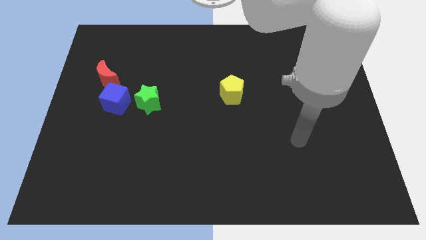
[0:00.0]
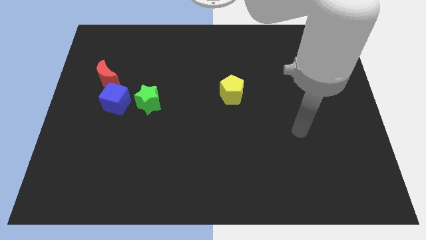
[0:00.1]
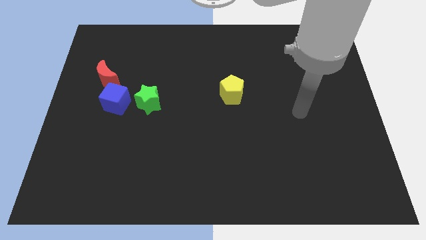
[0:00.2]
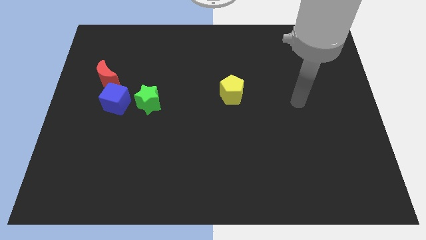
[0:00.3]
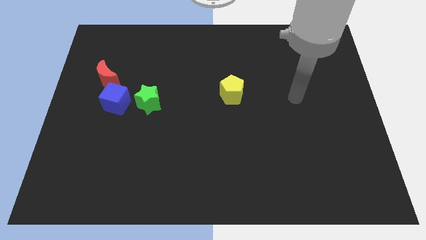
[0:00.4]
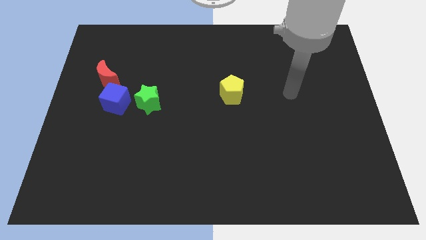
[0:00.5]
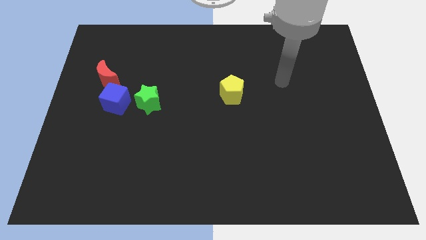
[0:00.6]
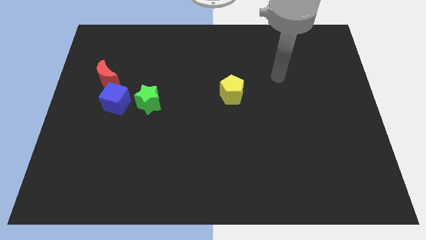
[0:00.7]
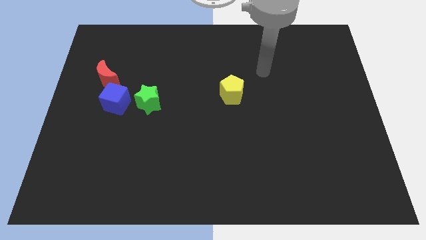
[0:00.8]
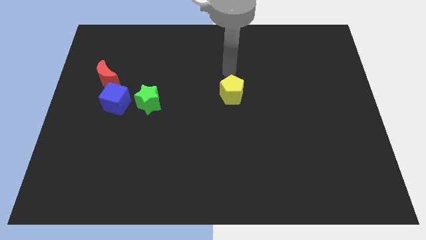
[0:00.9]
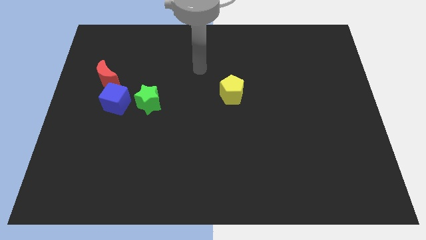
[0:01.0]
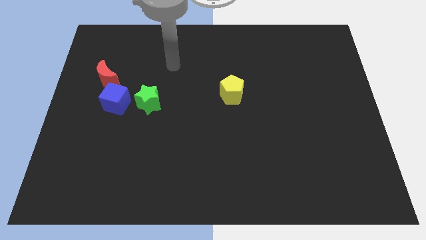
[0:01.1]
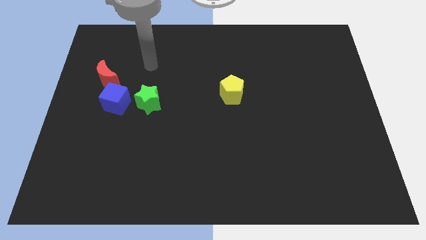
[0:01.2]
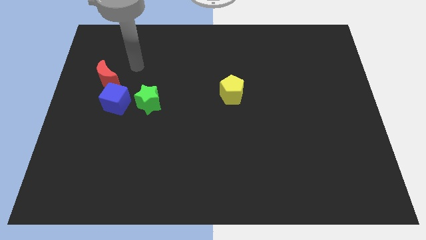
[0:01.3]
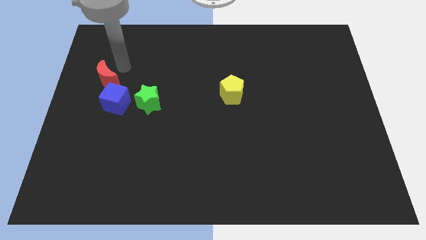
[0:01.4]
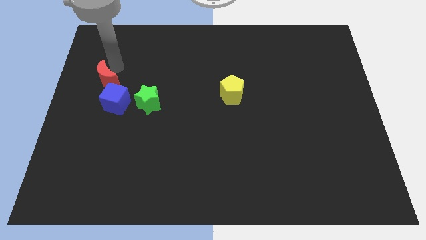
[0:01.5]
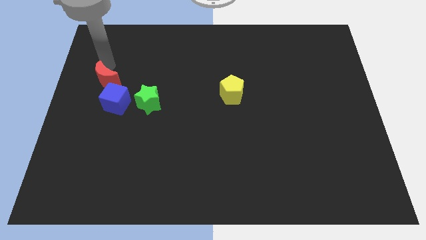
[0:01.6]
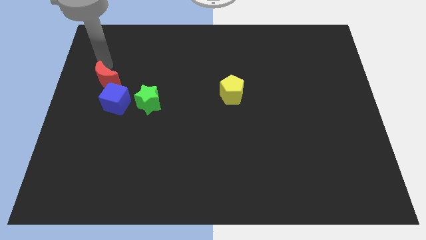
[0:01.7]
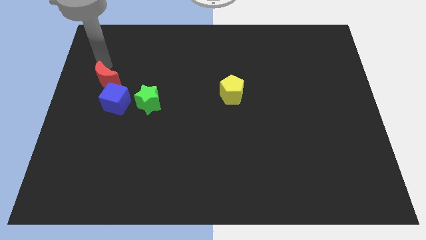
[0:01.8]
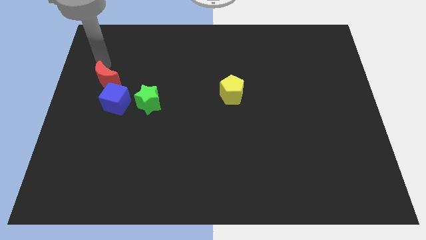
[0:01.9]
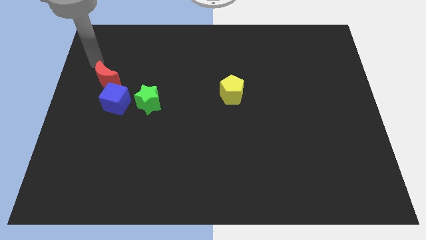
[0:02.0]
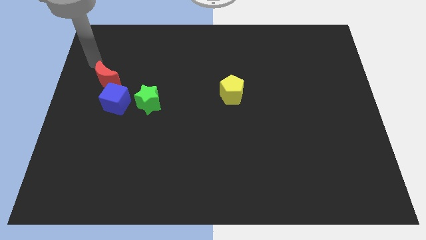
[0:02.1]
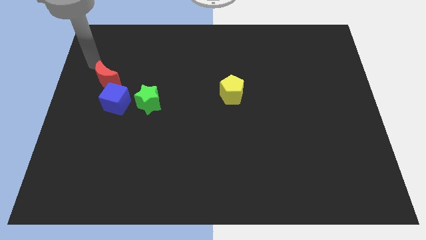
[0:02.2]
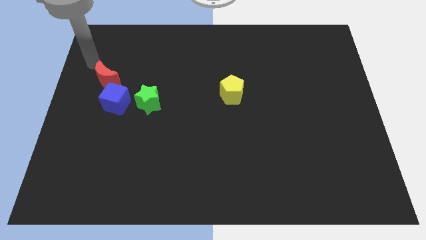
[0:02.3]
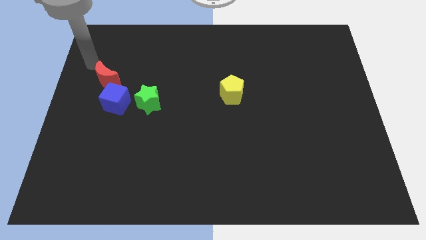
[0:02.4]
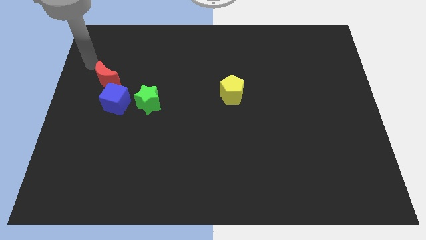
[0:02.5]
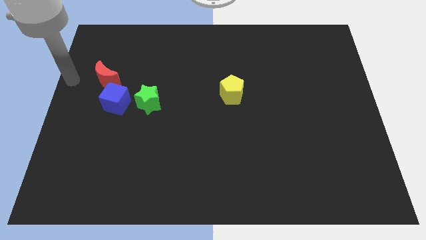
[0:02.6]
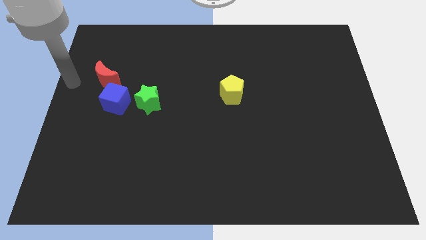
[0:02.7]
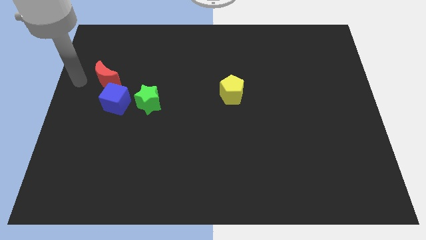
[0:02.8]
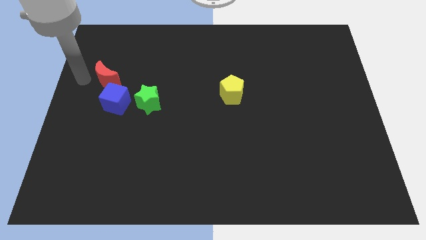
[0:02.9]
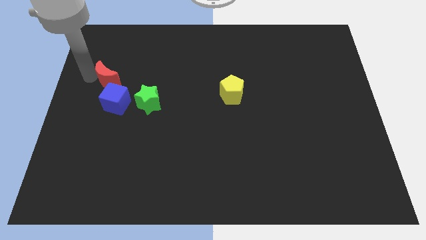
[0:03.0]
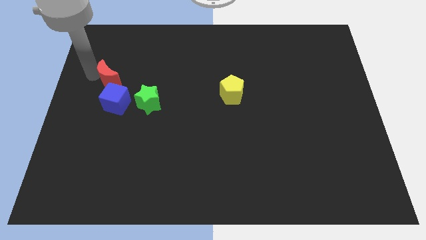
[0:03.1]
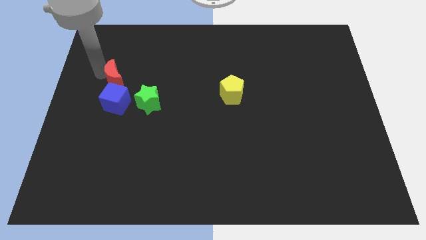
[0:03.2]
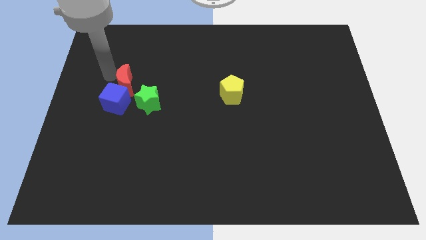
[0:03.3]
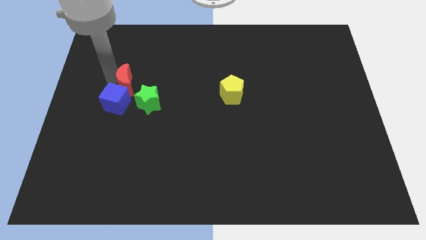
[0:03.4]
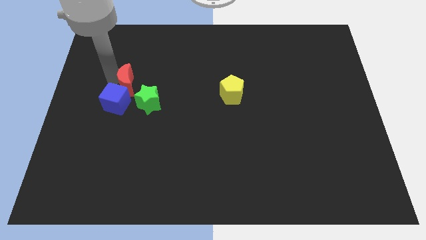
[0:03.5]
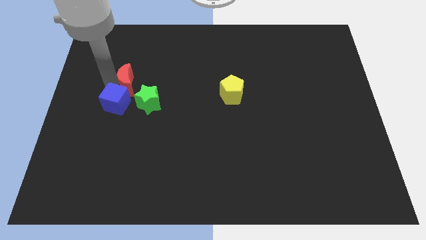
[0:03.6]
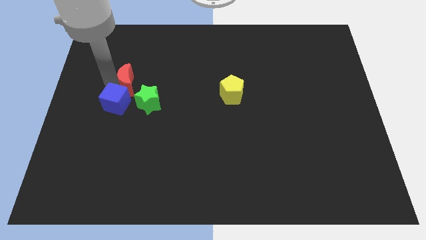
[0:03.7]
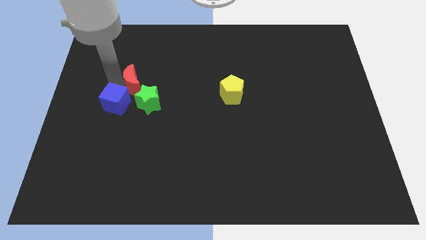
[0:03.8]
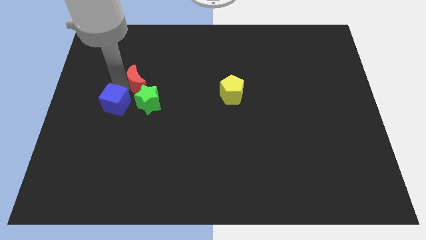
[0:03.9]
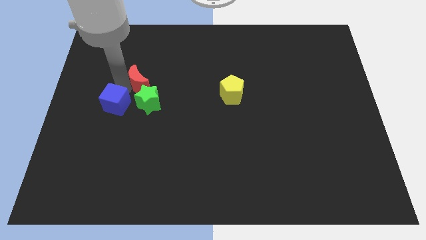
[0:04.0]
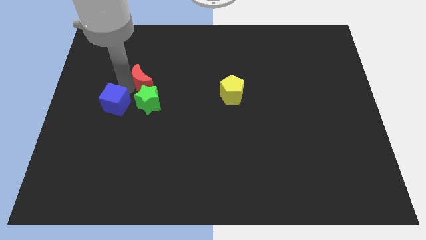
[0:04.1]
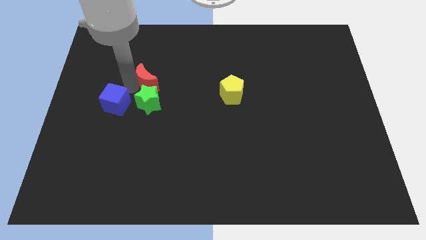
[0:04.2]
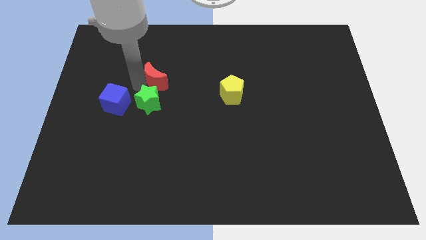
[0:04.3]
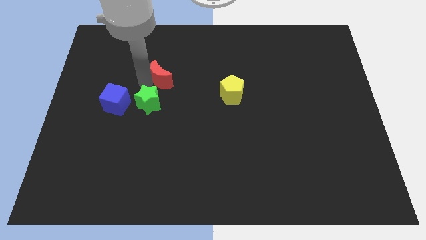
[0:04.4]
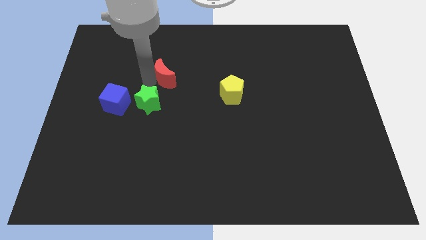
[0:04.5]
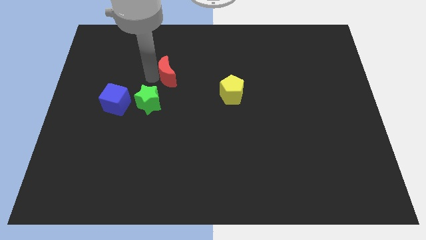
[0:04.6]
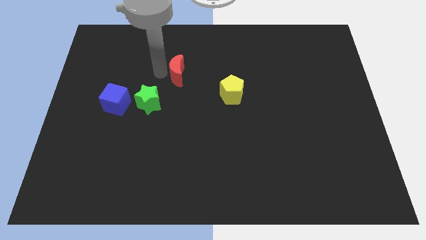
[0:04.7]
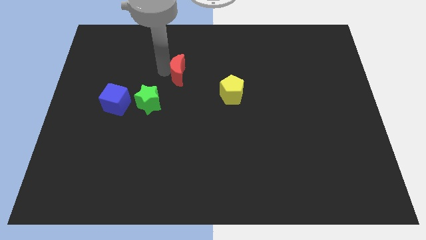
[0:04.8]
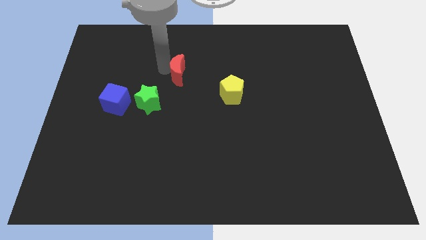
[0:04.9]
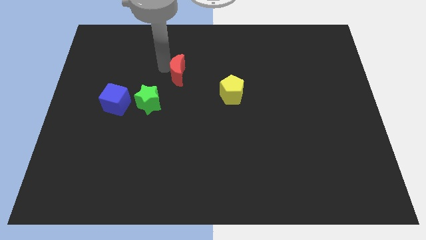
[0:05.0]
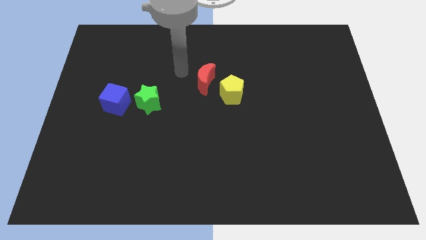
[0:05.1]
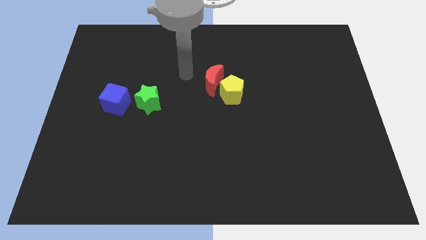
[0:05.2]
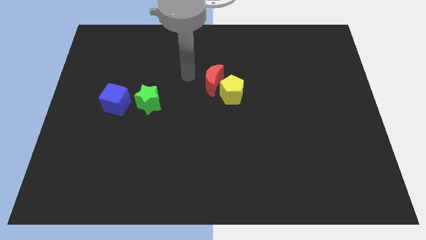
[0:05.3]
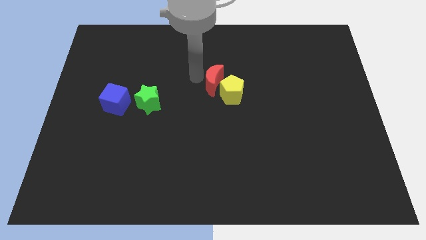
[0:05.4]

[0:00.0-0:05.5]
move the red block next to the yellow block

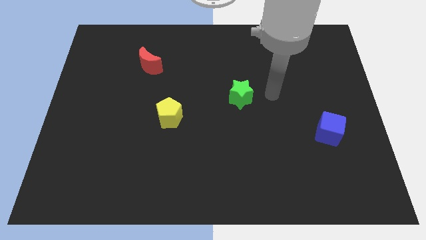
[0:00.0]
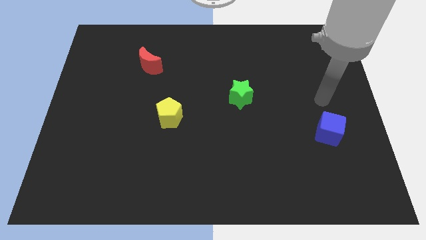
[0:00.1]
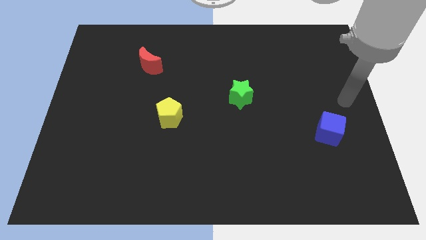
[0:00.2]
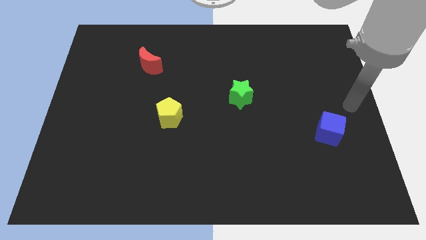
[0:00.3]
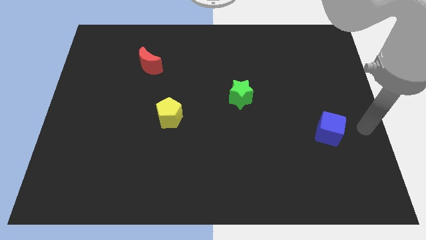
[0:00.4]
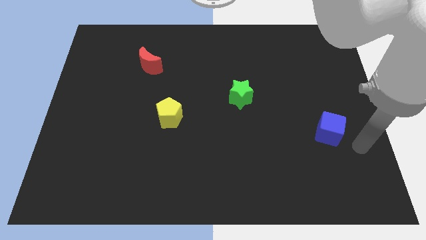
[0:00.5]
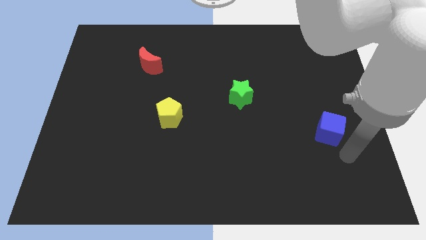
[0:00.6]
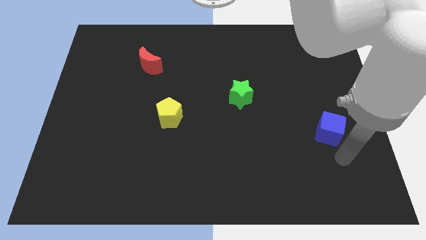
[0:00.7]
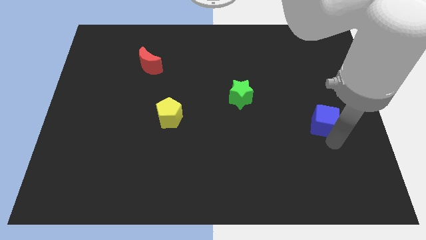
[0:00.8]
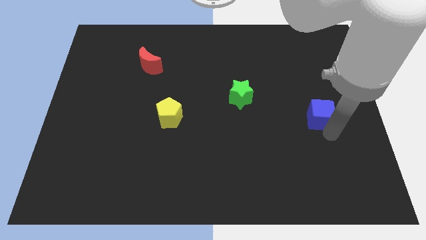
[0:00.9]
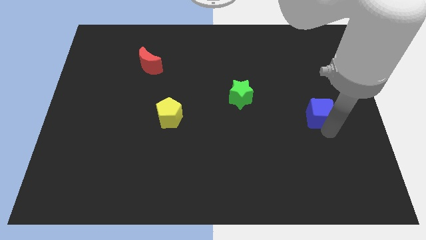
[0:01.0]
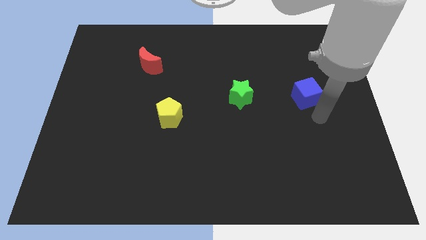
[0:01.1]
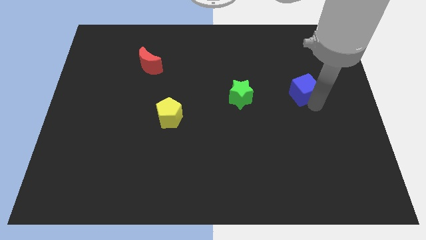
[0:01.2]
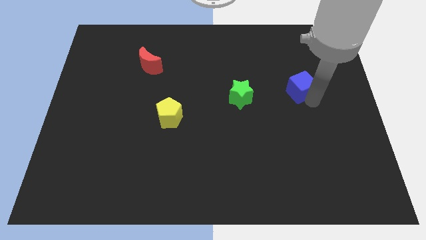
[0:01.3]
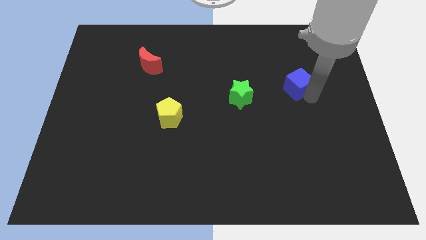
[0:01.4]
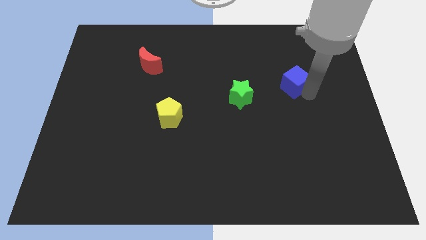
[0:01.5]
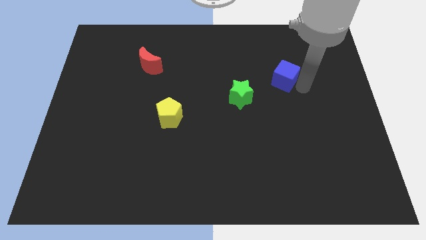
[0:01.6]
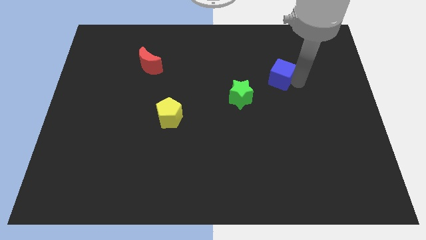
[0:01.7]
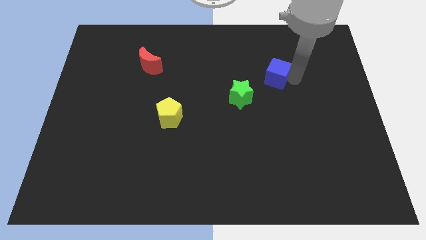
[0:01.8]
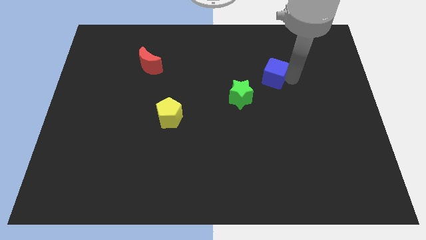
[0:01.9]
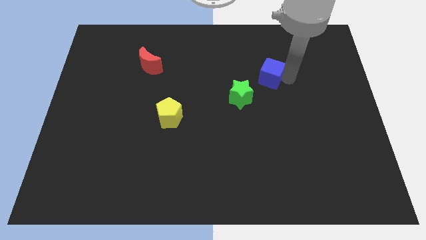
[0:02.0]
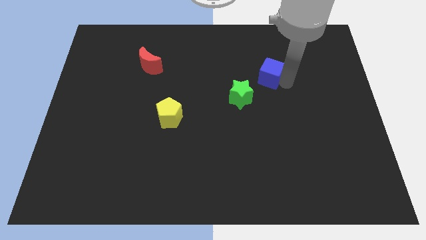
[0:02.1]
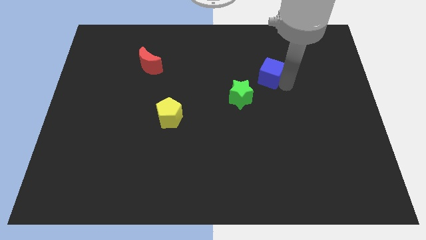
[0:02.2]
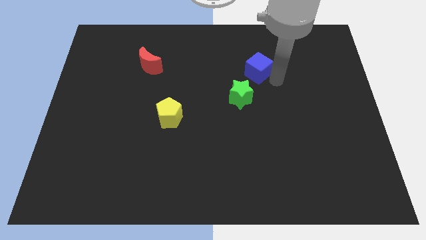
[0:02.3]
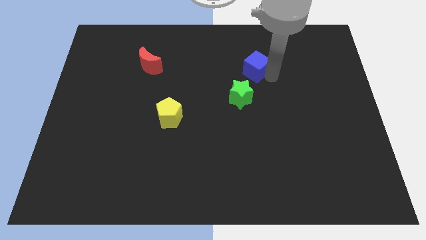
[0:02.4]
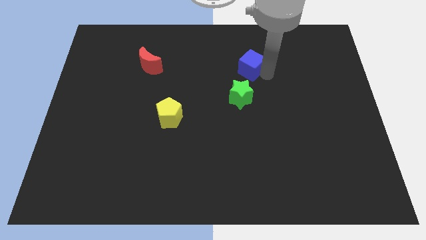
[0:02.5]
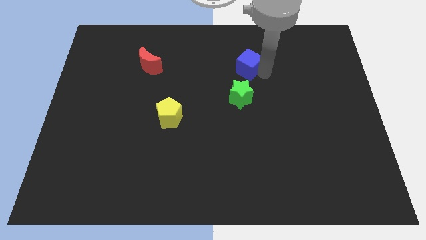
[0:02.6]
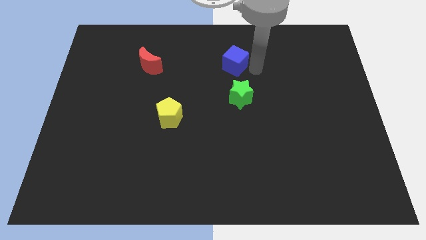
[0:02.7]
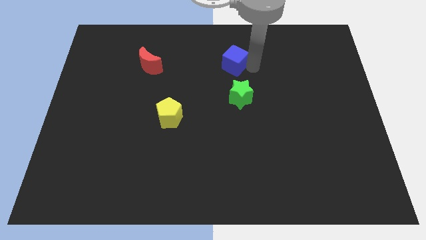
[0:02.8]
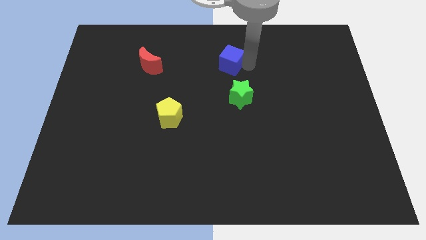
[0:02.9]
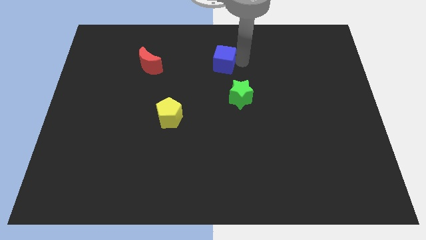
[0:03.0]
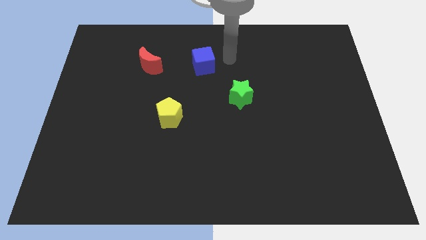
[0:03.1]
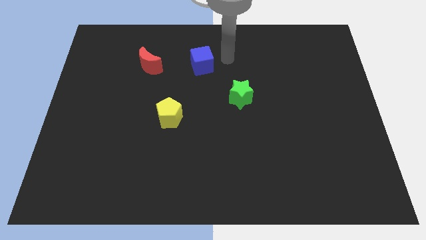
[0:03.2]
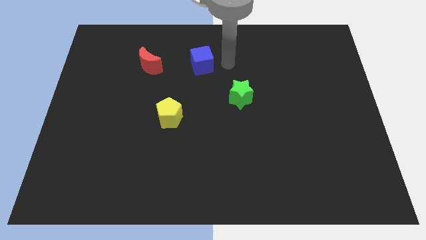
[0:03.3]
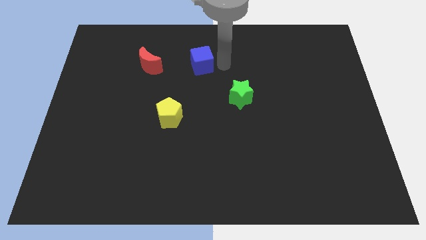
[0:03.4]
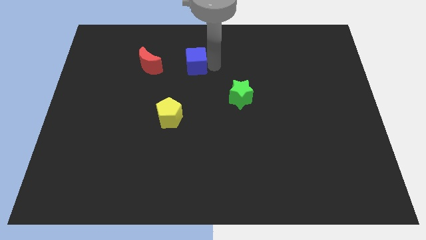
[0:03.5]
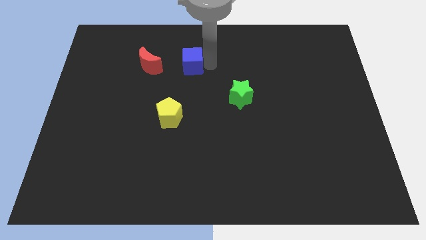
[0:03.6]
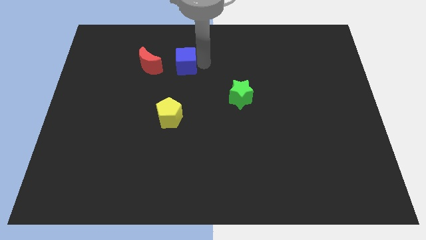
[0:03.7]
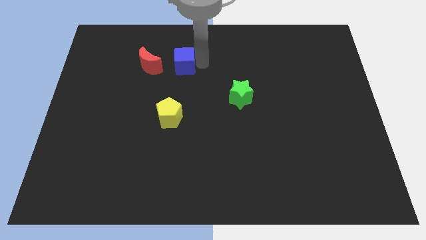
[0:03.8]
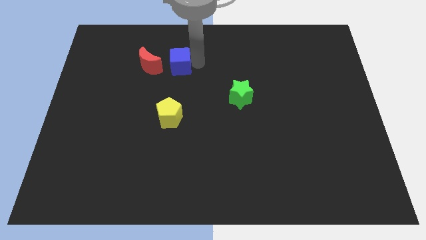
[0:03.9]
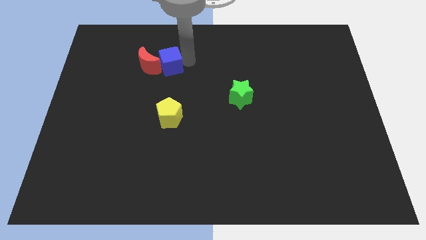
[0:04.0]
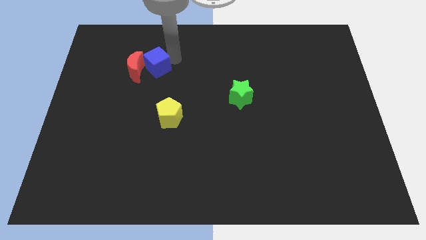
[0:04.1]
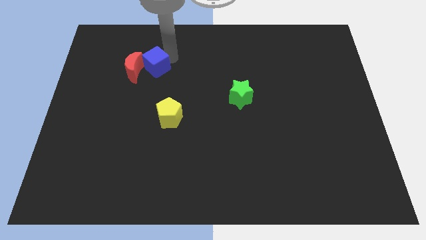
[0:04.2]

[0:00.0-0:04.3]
put the blue cube to the red moon
